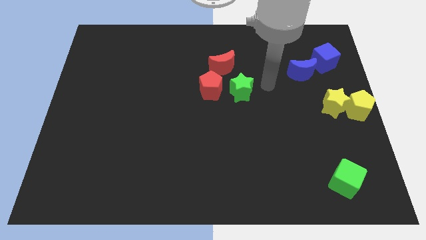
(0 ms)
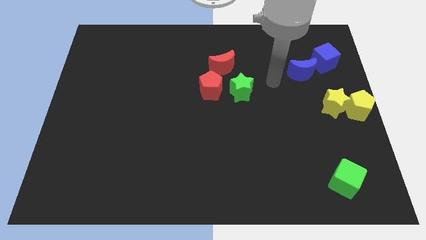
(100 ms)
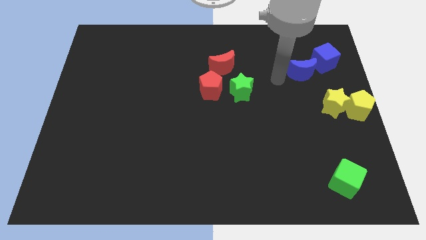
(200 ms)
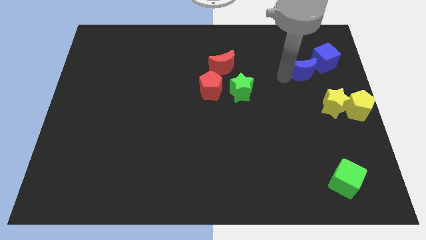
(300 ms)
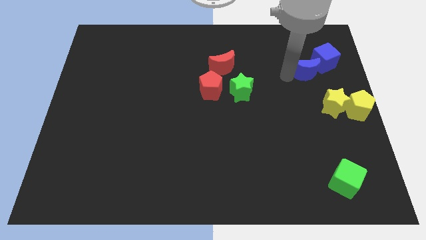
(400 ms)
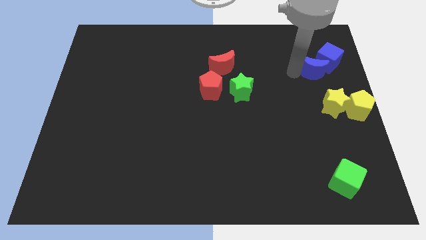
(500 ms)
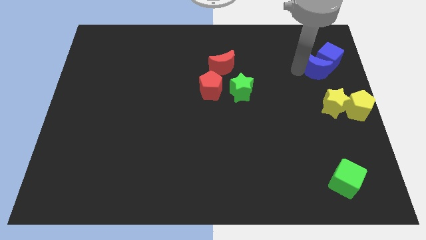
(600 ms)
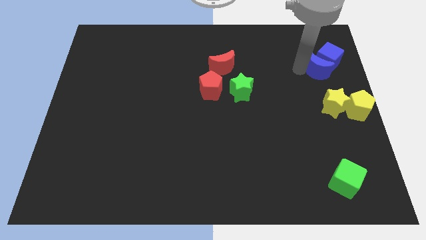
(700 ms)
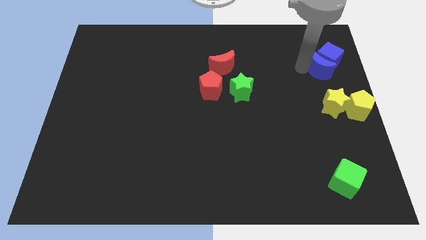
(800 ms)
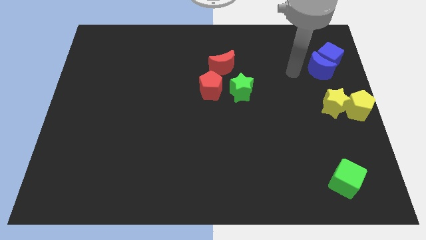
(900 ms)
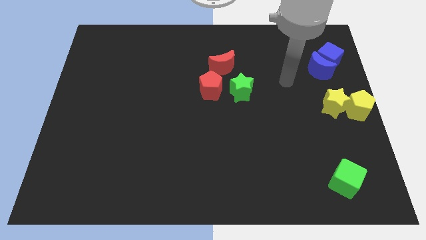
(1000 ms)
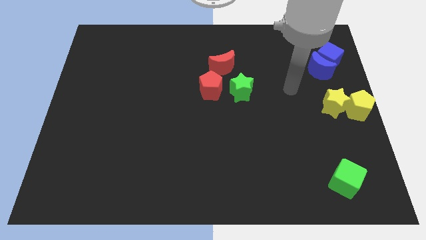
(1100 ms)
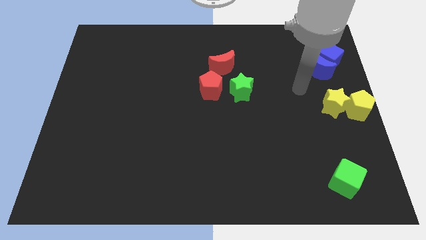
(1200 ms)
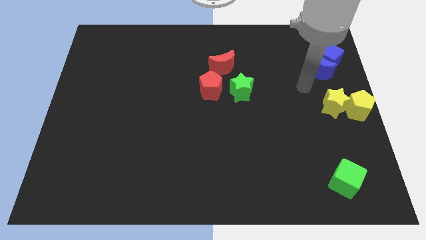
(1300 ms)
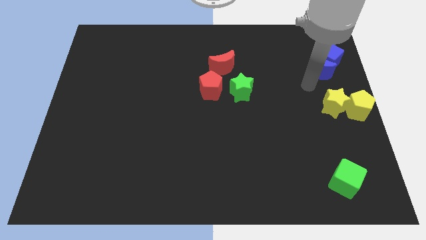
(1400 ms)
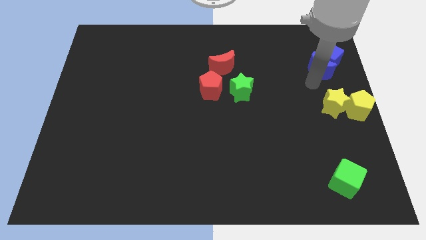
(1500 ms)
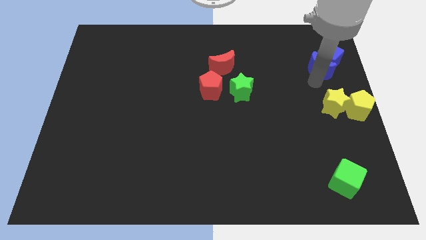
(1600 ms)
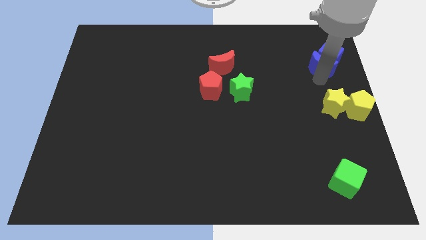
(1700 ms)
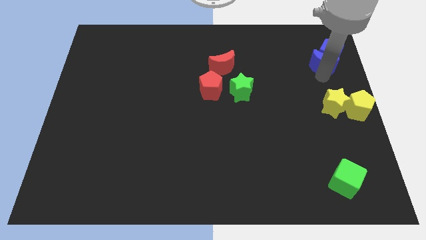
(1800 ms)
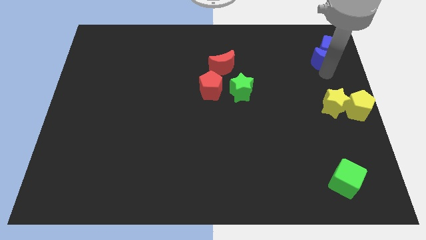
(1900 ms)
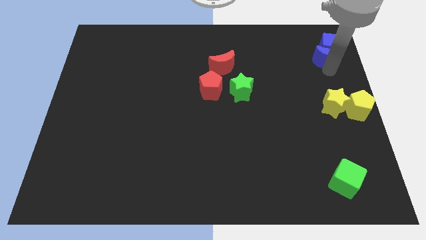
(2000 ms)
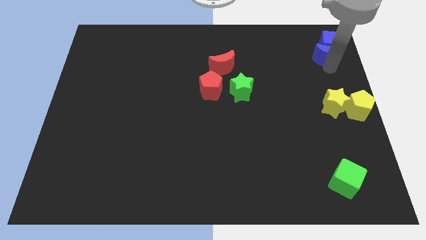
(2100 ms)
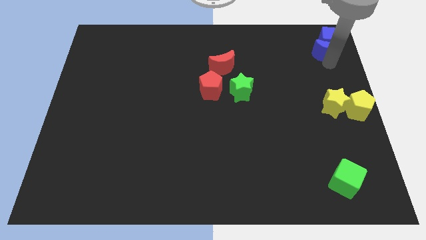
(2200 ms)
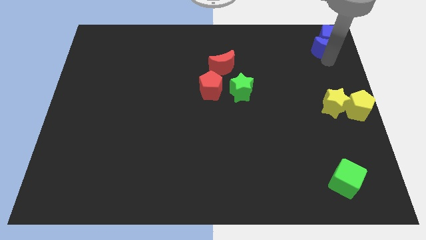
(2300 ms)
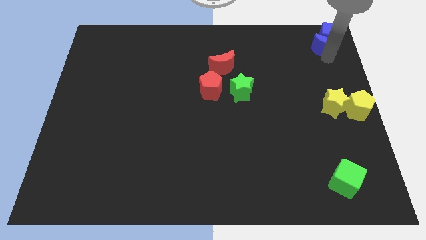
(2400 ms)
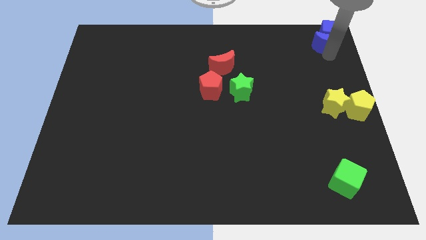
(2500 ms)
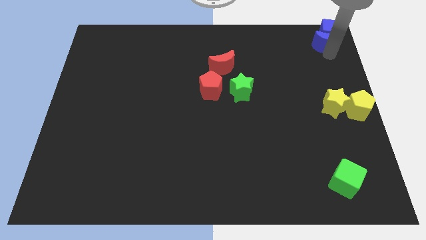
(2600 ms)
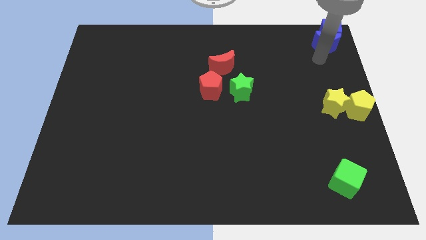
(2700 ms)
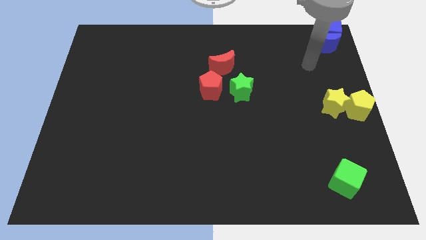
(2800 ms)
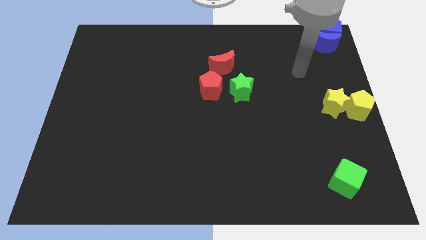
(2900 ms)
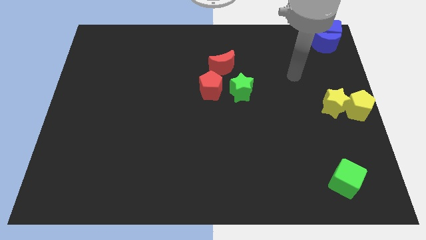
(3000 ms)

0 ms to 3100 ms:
move the blue blocks to the top right corner of the board

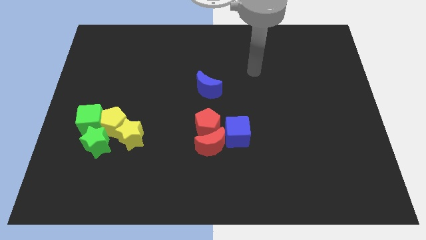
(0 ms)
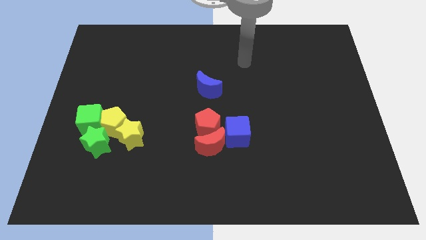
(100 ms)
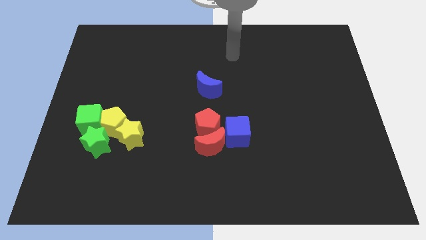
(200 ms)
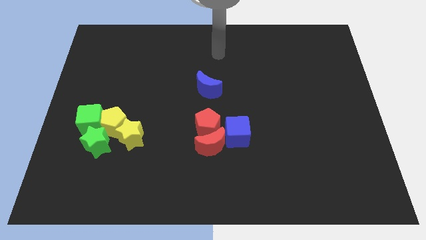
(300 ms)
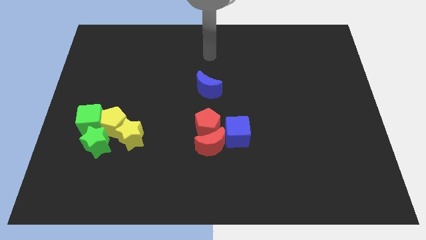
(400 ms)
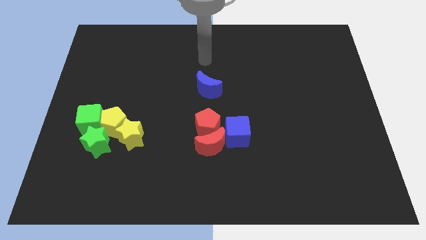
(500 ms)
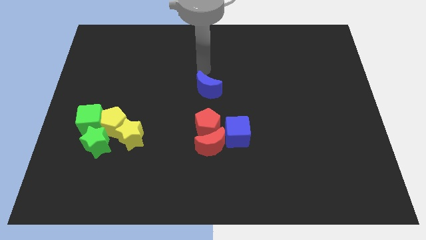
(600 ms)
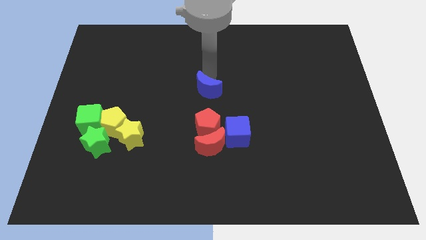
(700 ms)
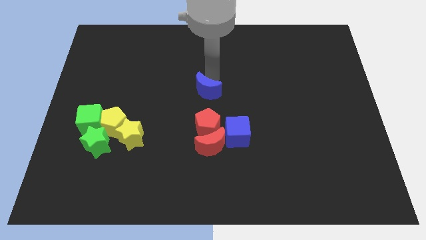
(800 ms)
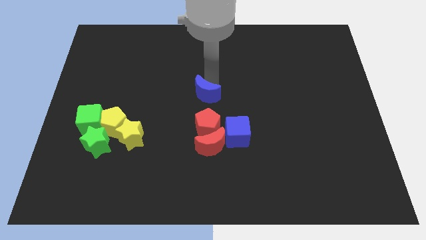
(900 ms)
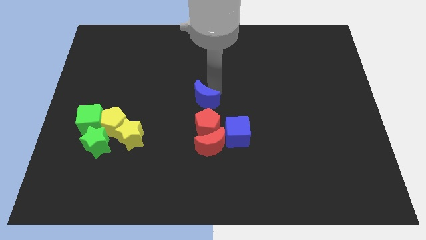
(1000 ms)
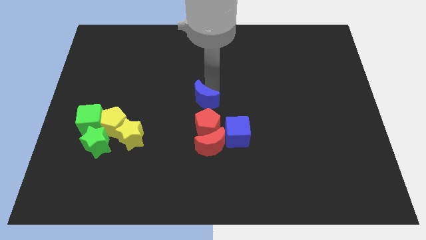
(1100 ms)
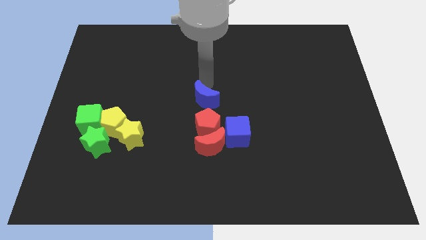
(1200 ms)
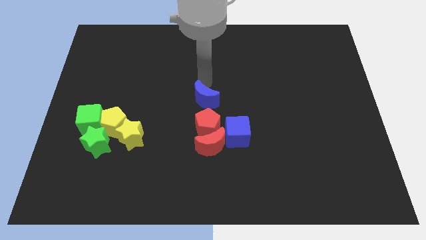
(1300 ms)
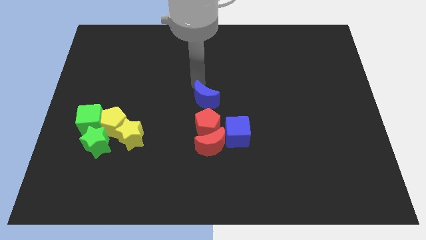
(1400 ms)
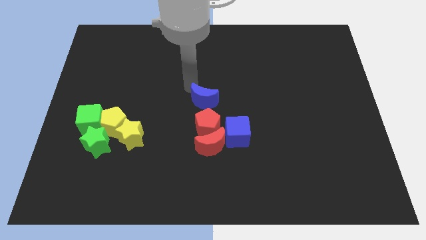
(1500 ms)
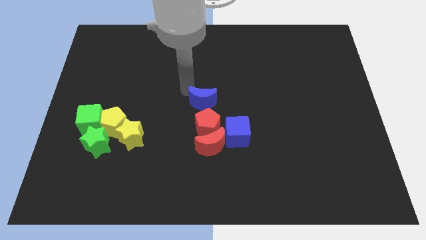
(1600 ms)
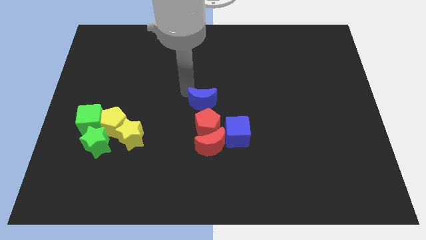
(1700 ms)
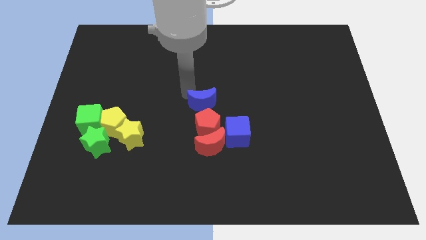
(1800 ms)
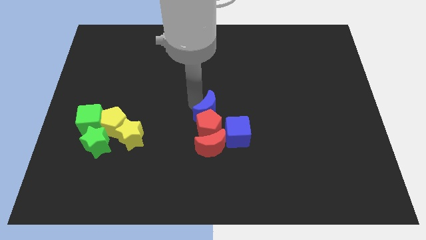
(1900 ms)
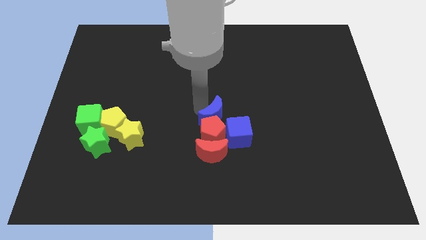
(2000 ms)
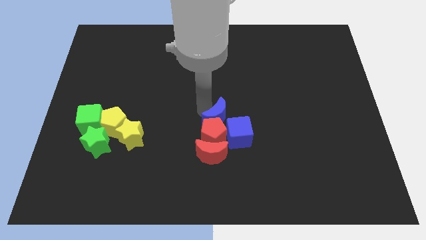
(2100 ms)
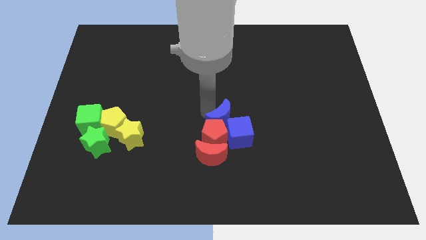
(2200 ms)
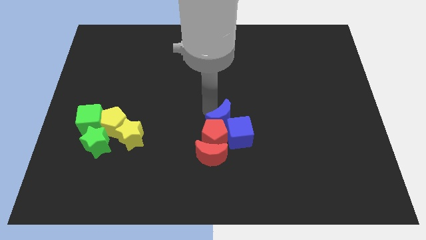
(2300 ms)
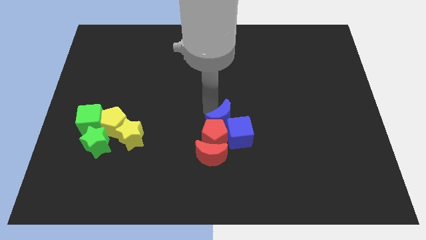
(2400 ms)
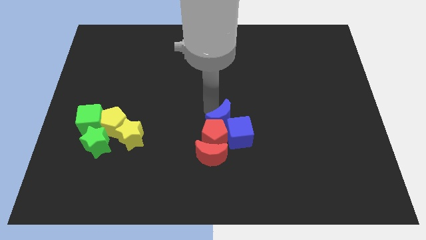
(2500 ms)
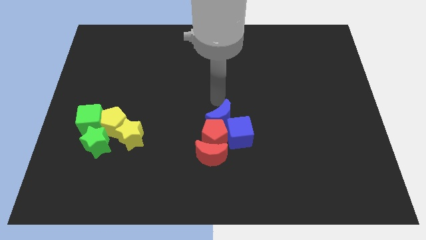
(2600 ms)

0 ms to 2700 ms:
push the blue crescent into the red pentagon along with the blue cube and red crescent

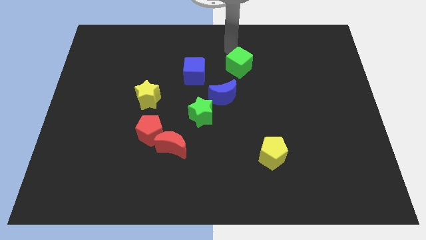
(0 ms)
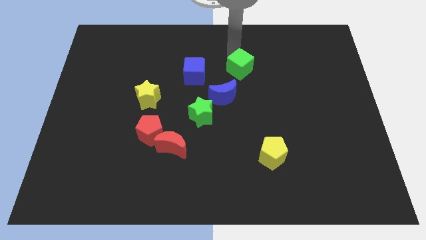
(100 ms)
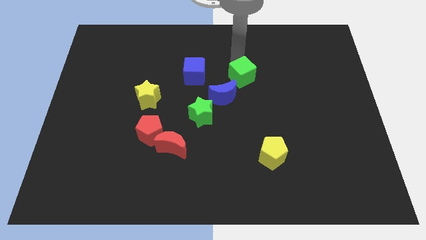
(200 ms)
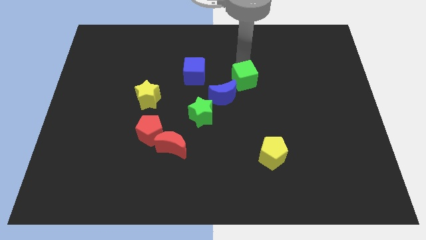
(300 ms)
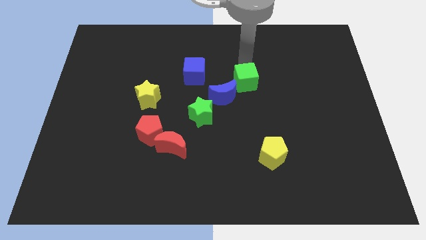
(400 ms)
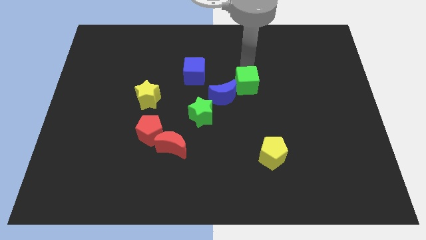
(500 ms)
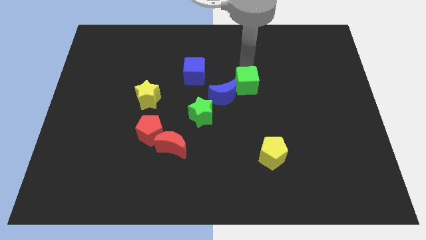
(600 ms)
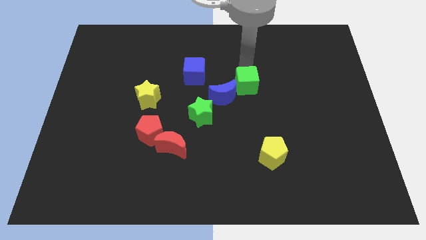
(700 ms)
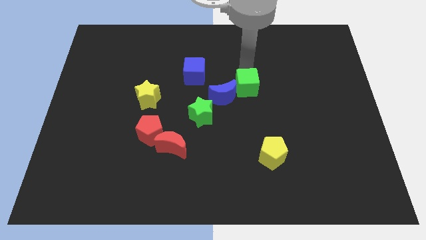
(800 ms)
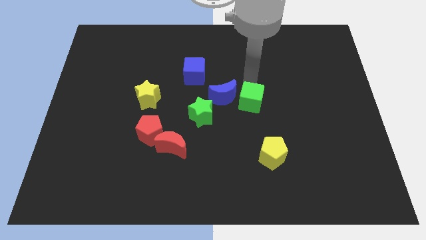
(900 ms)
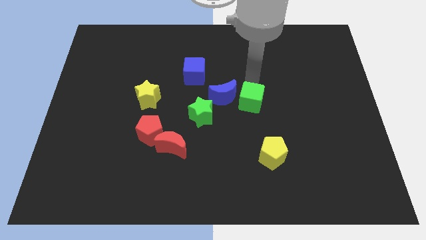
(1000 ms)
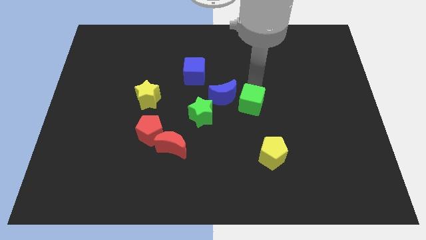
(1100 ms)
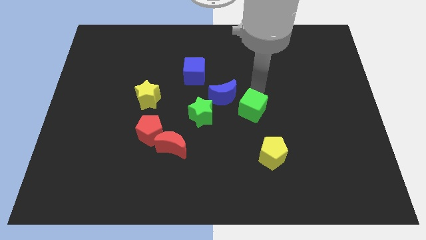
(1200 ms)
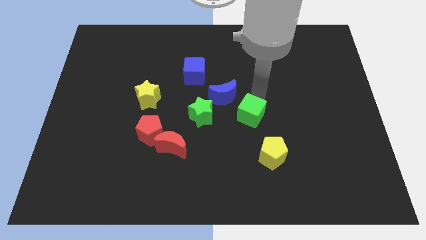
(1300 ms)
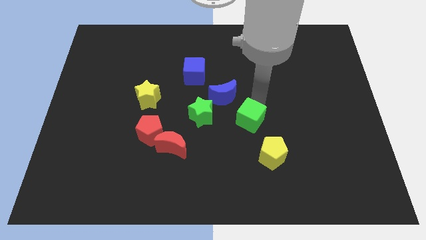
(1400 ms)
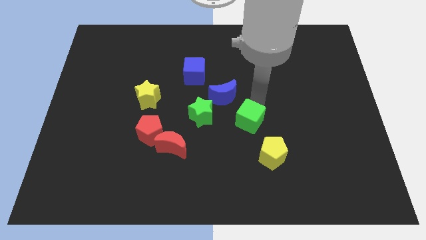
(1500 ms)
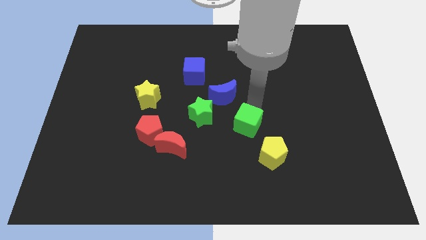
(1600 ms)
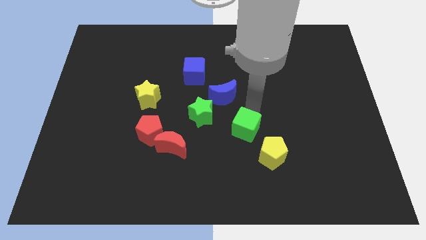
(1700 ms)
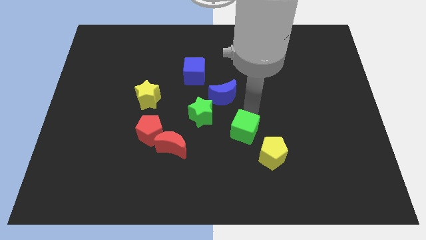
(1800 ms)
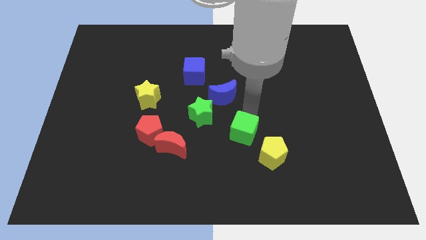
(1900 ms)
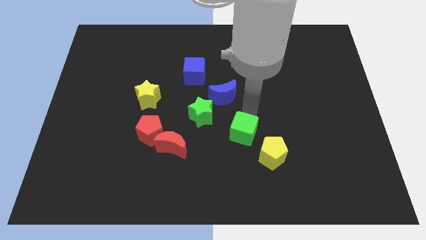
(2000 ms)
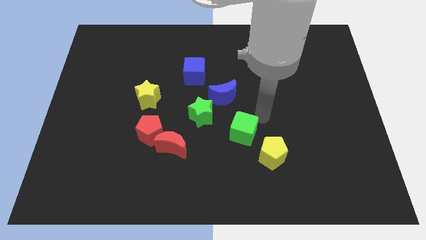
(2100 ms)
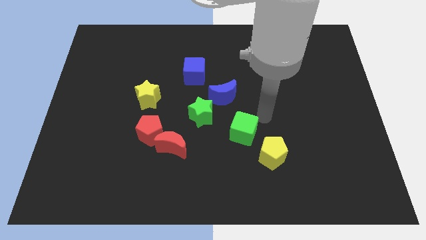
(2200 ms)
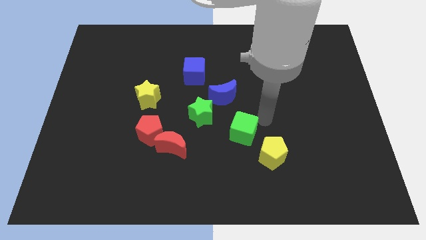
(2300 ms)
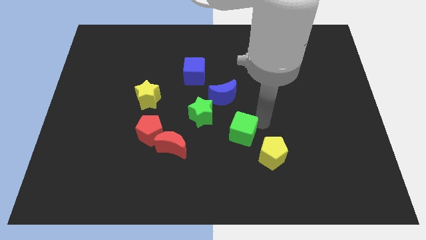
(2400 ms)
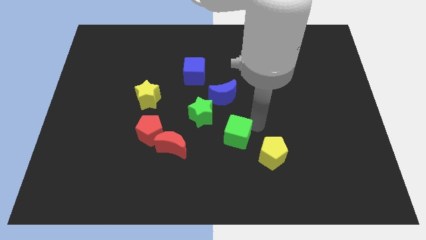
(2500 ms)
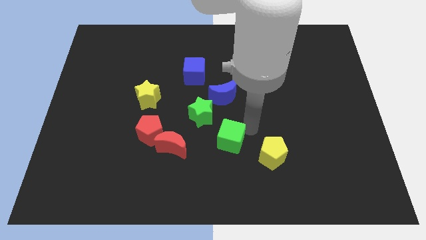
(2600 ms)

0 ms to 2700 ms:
place the green cube between the yellow pentagon and the green star

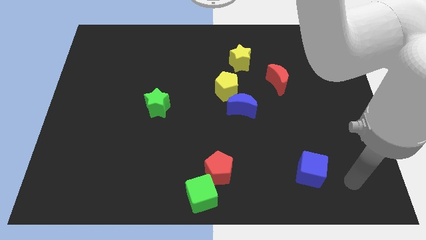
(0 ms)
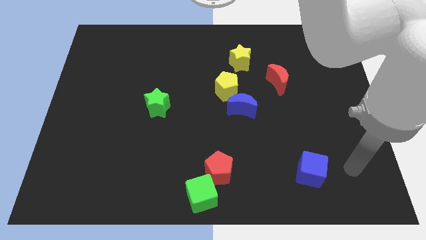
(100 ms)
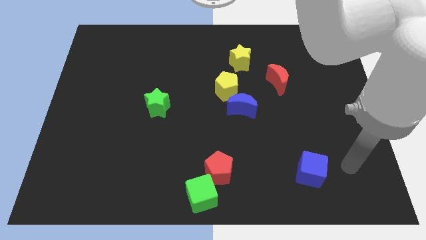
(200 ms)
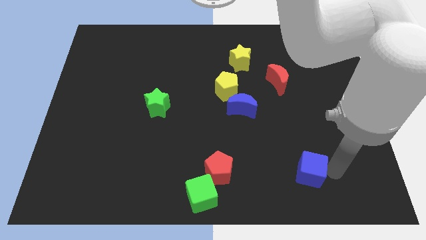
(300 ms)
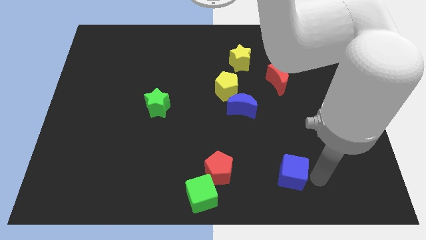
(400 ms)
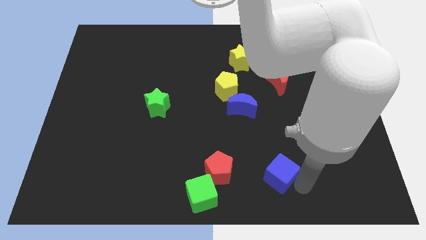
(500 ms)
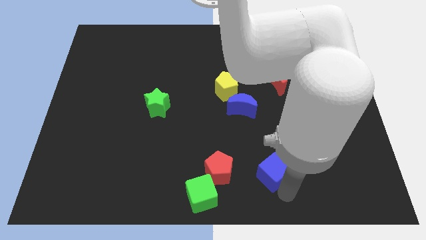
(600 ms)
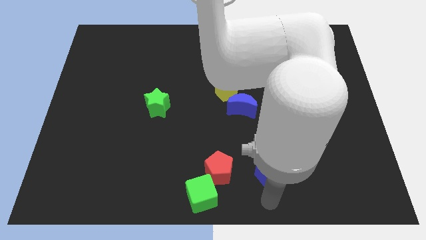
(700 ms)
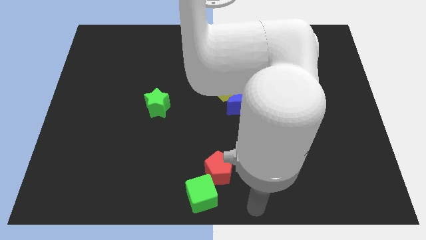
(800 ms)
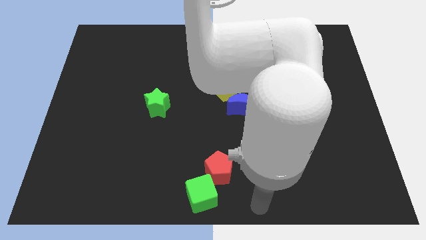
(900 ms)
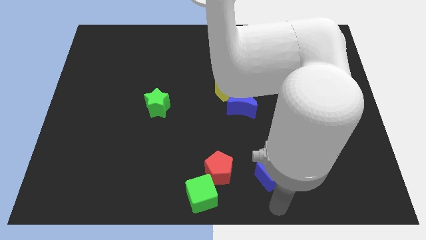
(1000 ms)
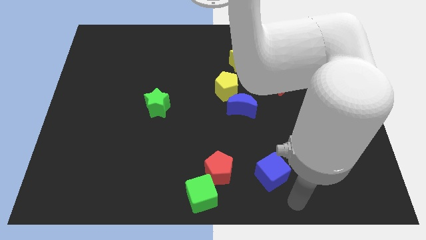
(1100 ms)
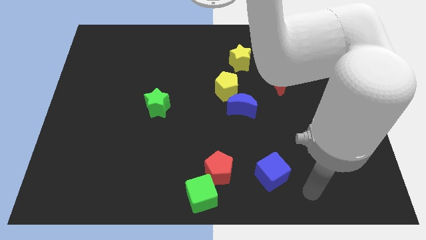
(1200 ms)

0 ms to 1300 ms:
move the blue cube parallel to the right of the red pentagon
